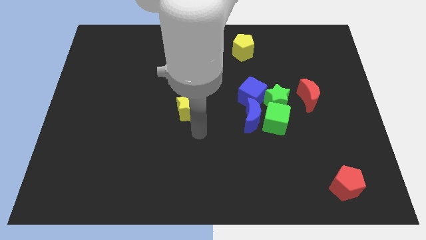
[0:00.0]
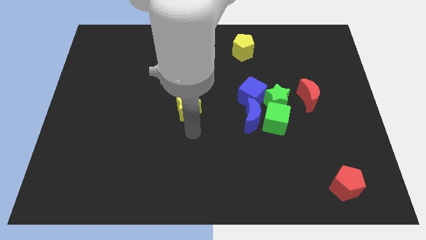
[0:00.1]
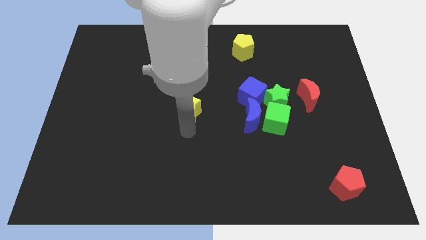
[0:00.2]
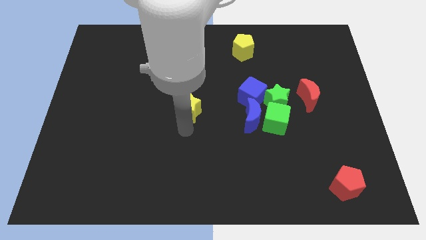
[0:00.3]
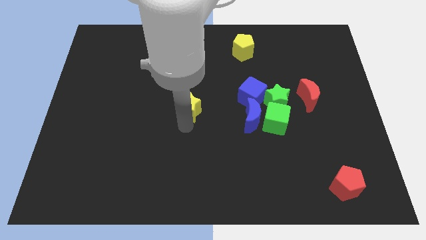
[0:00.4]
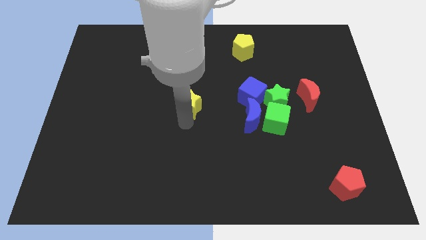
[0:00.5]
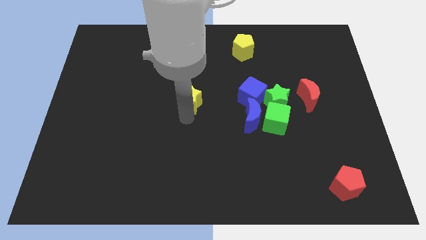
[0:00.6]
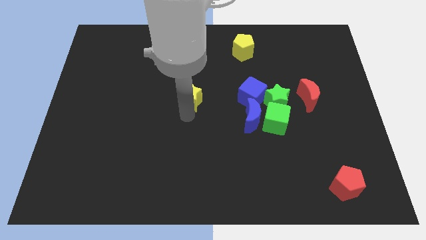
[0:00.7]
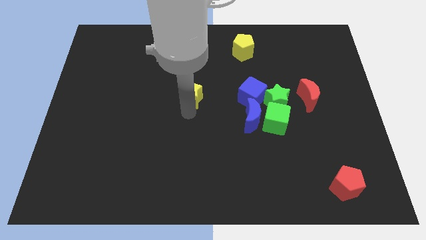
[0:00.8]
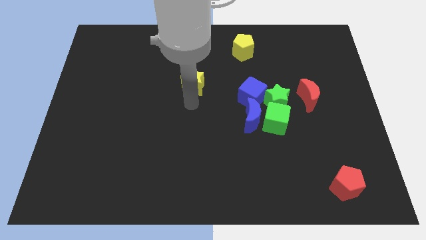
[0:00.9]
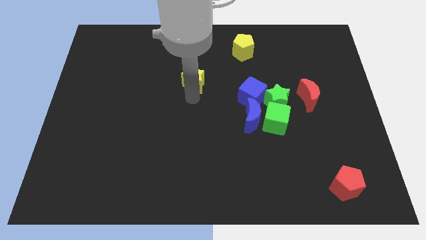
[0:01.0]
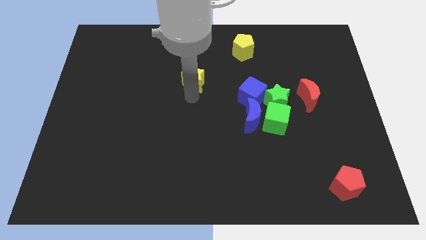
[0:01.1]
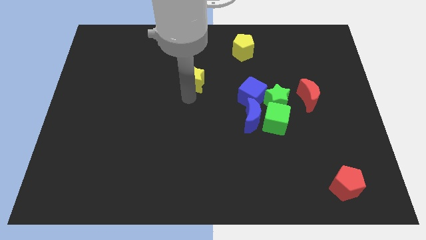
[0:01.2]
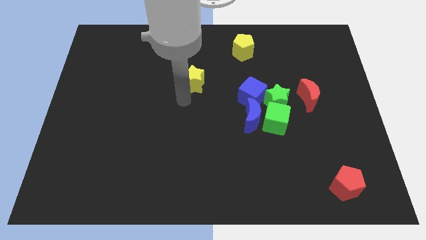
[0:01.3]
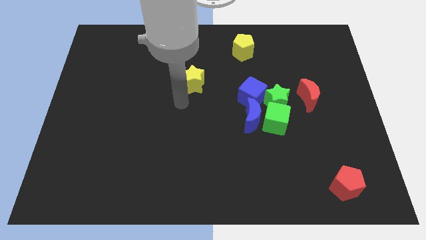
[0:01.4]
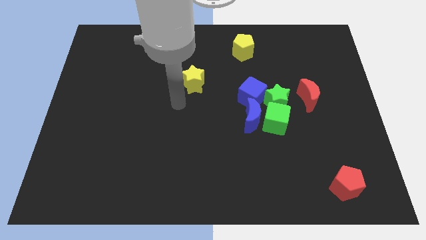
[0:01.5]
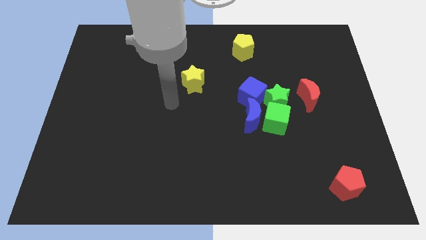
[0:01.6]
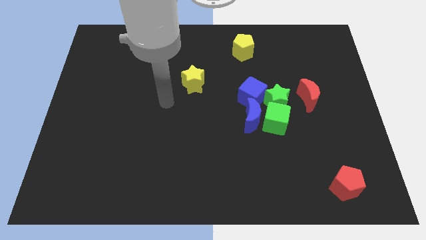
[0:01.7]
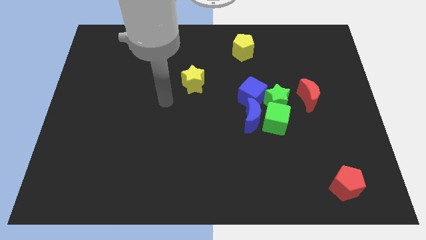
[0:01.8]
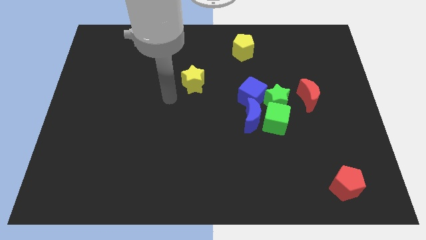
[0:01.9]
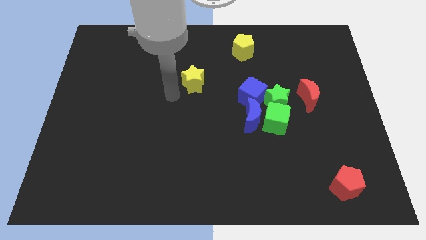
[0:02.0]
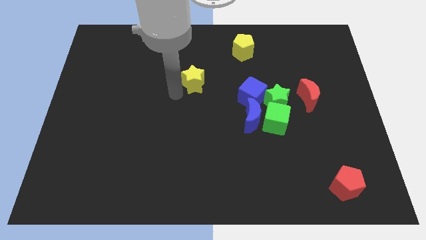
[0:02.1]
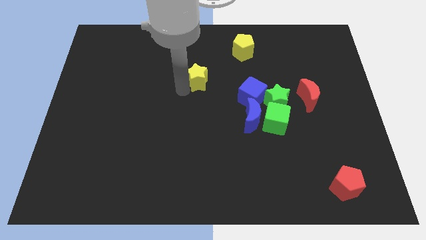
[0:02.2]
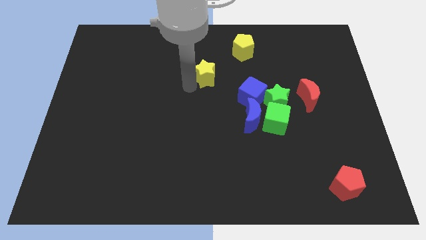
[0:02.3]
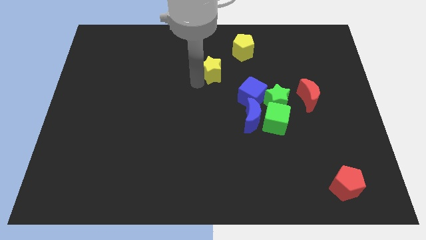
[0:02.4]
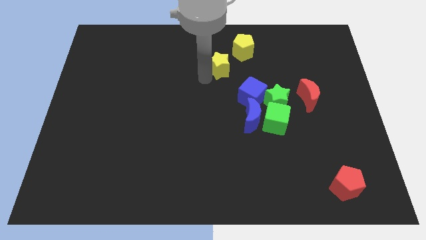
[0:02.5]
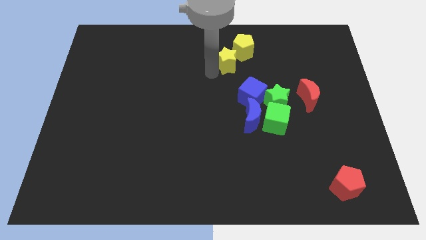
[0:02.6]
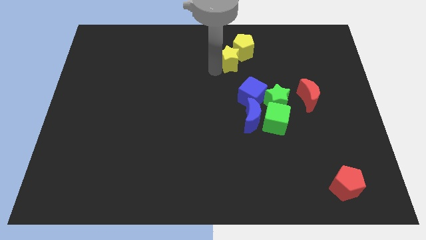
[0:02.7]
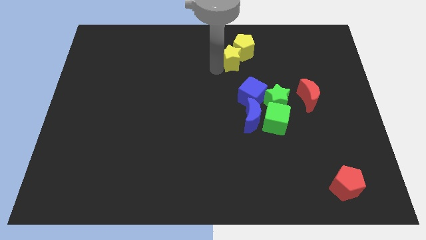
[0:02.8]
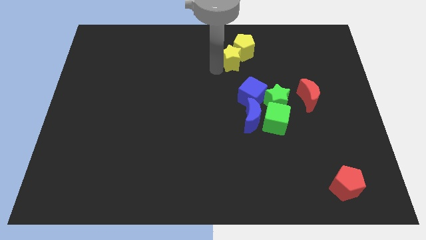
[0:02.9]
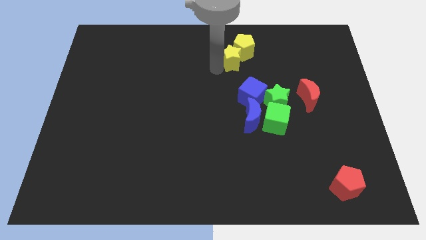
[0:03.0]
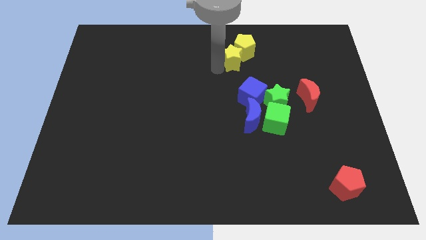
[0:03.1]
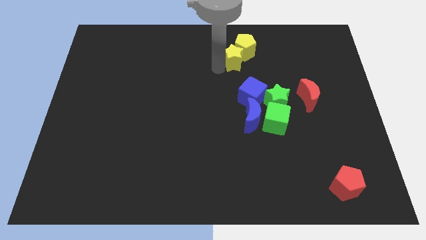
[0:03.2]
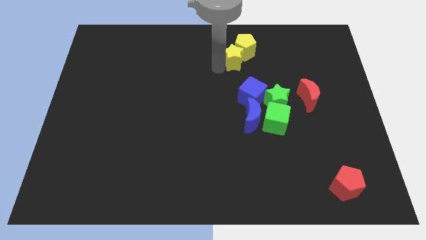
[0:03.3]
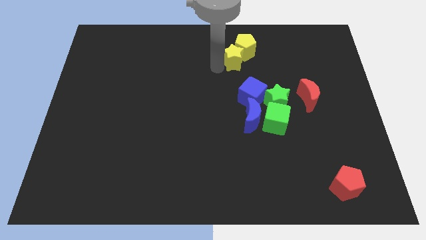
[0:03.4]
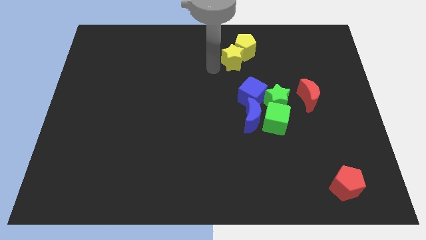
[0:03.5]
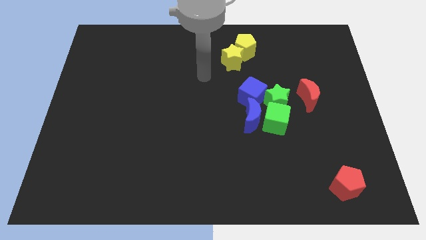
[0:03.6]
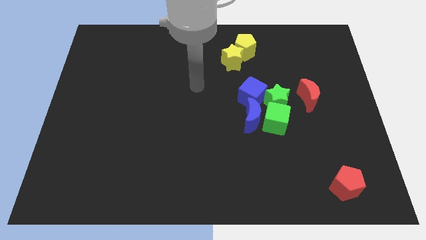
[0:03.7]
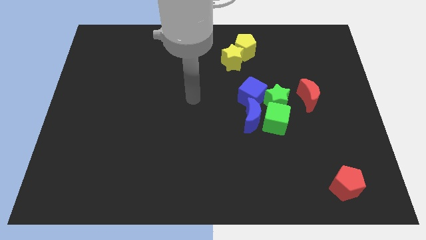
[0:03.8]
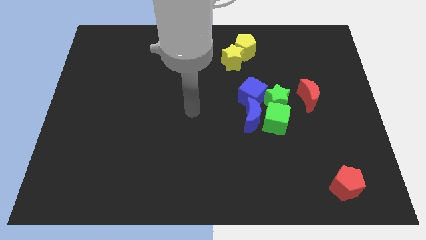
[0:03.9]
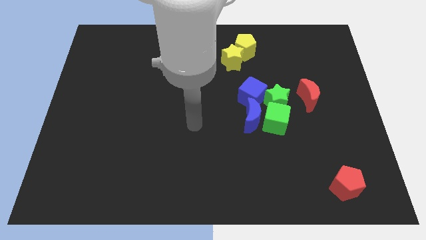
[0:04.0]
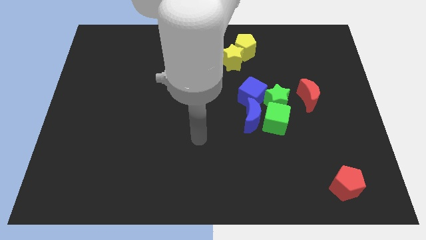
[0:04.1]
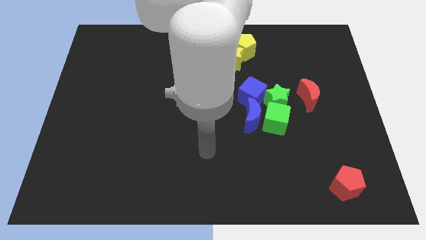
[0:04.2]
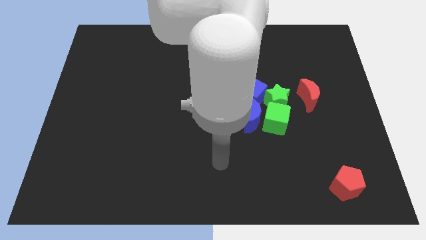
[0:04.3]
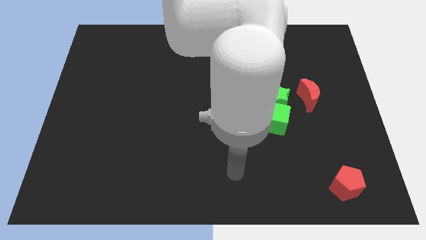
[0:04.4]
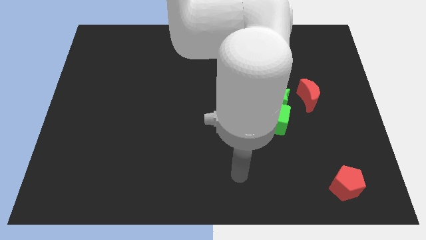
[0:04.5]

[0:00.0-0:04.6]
push yellow star below yellow pentagon

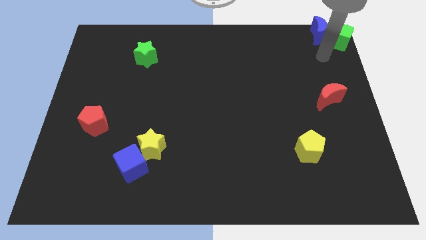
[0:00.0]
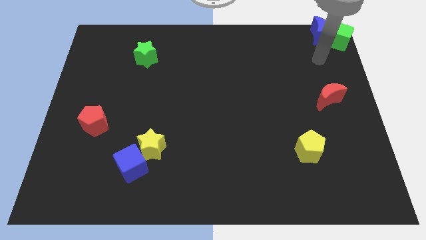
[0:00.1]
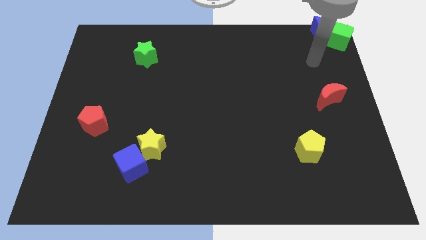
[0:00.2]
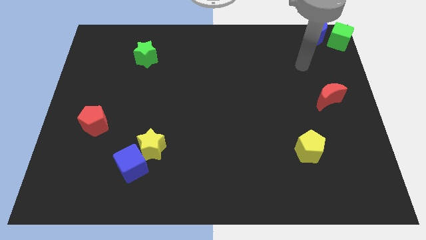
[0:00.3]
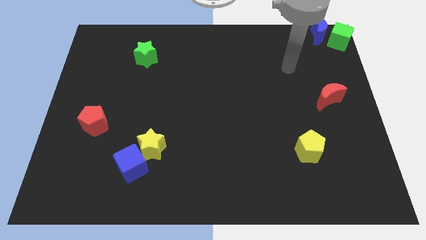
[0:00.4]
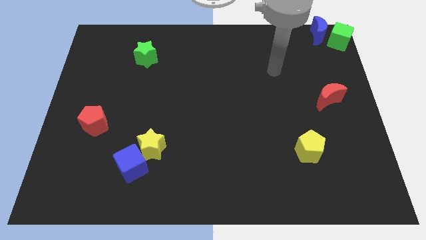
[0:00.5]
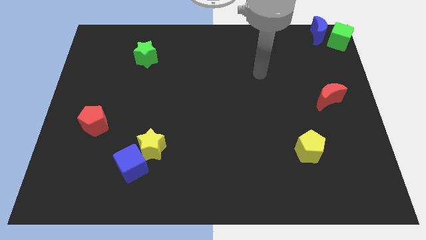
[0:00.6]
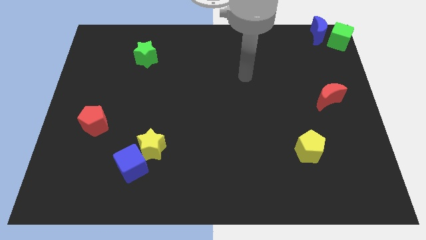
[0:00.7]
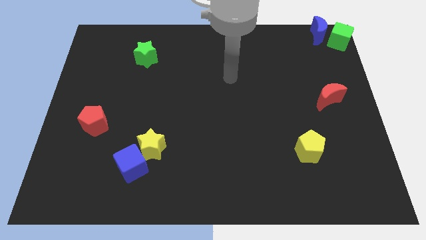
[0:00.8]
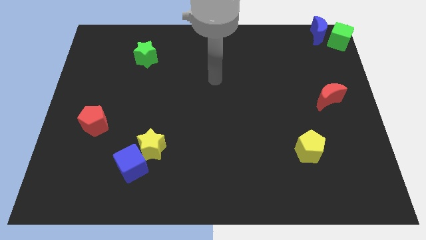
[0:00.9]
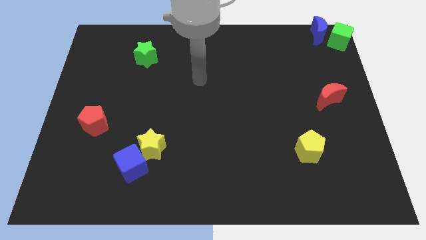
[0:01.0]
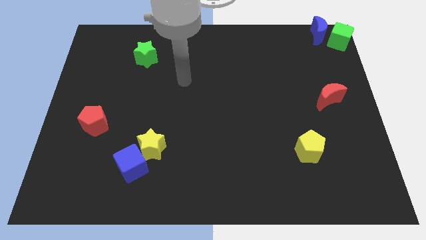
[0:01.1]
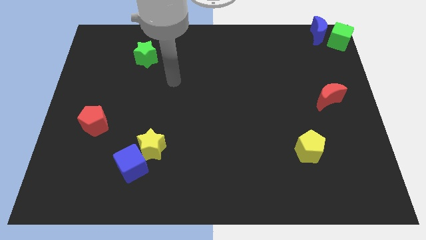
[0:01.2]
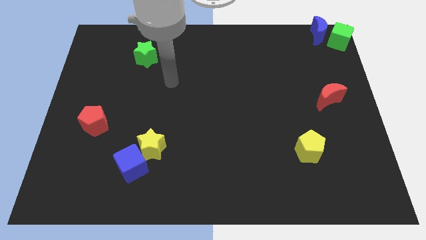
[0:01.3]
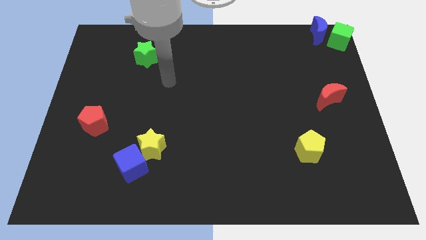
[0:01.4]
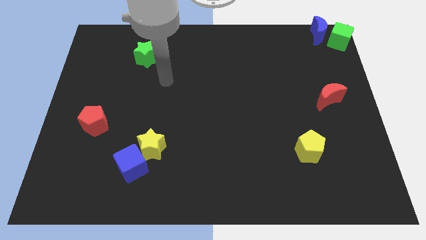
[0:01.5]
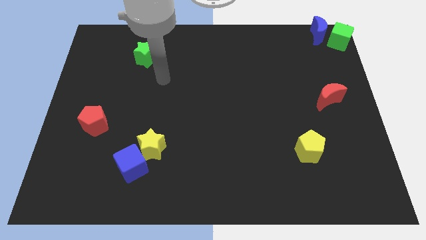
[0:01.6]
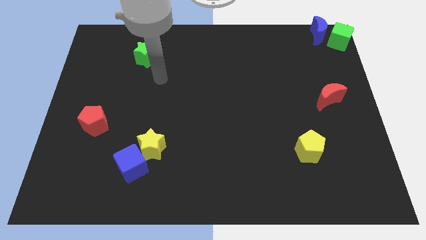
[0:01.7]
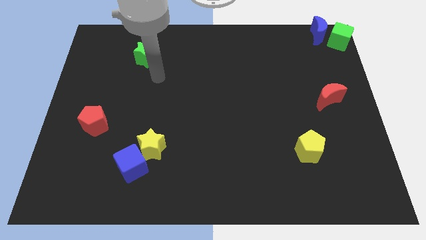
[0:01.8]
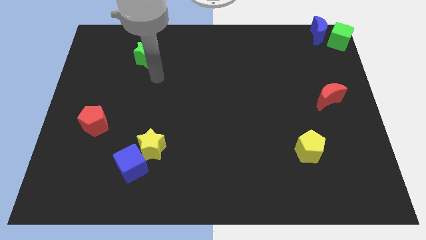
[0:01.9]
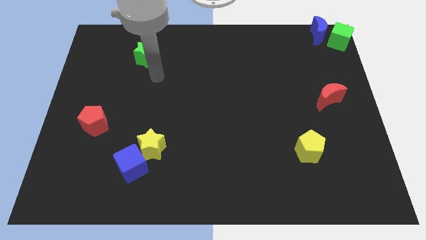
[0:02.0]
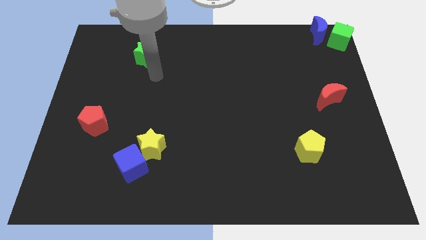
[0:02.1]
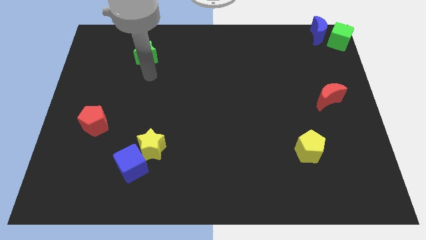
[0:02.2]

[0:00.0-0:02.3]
move your arm bottom to the green star

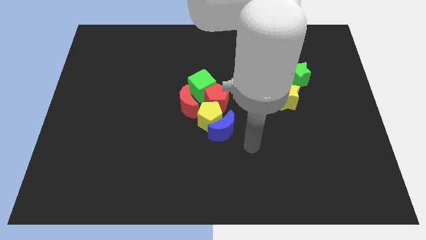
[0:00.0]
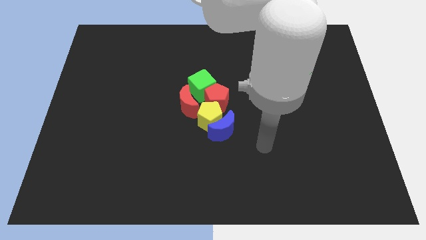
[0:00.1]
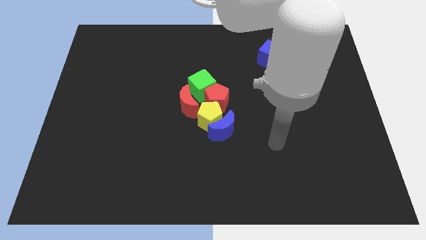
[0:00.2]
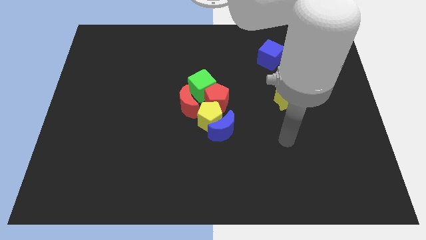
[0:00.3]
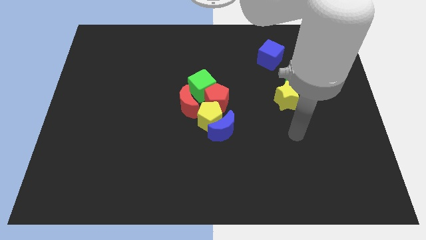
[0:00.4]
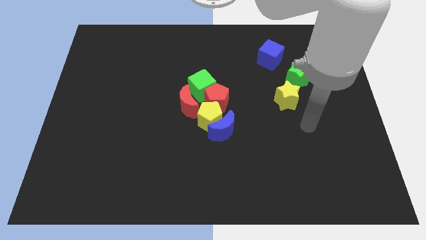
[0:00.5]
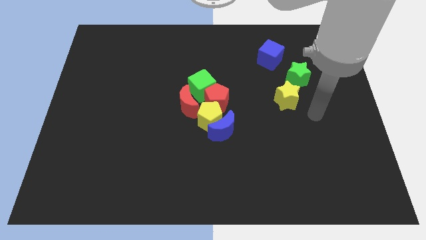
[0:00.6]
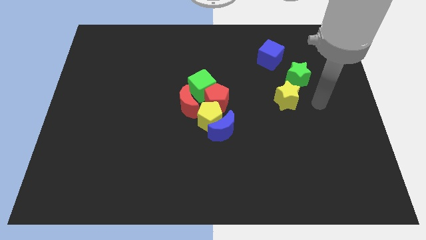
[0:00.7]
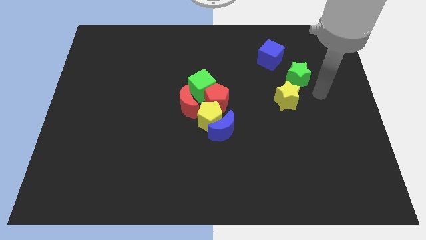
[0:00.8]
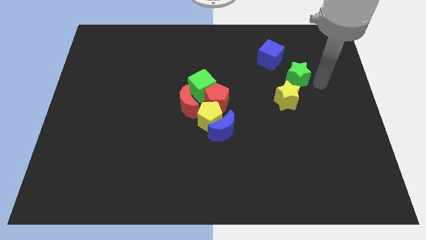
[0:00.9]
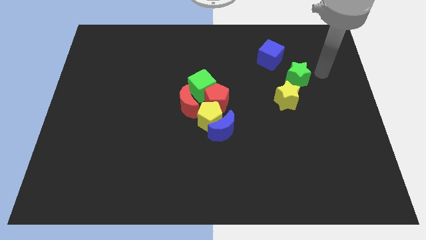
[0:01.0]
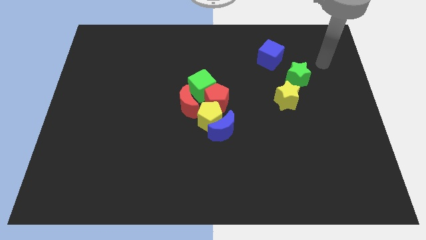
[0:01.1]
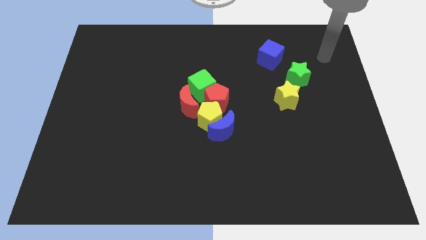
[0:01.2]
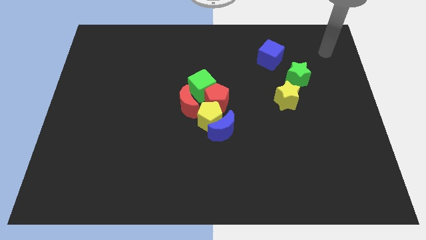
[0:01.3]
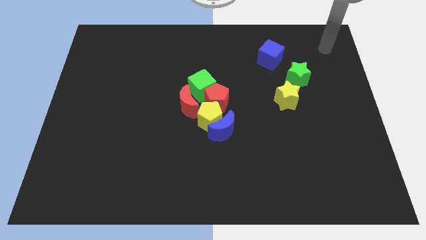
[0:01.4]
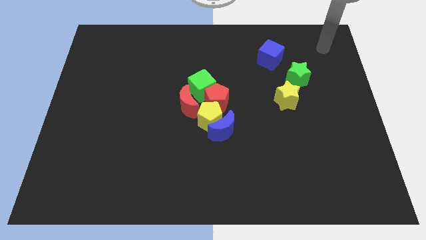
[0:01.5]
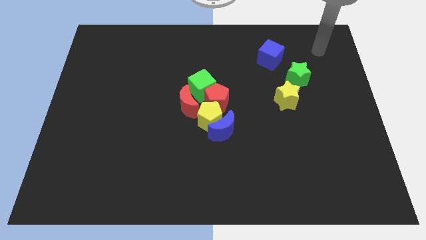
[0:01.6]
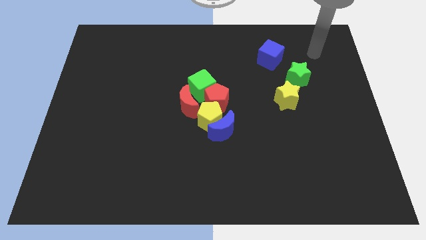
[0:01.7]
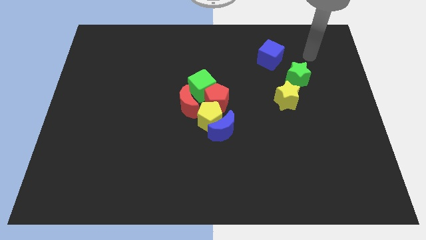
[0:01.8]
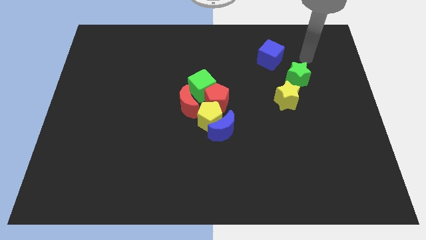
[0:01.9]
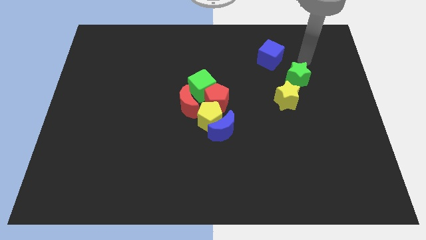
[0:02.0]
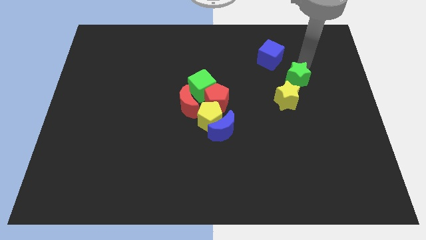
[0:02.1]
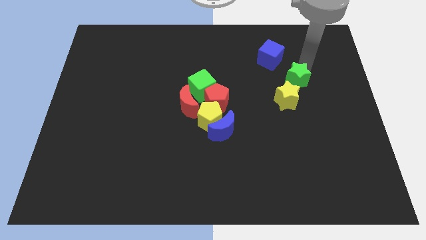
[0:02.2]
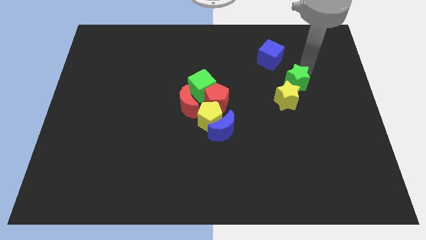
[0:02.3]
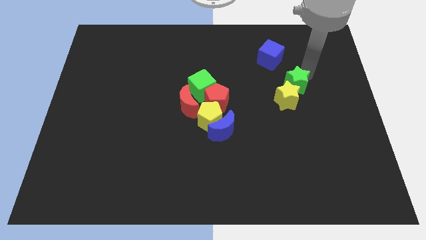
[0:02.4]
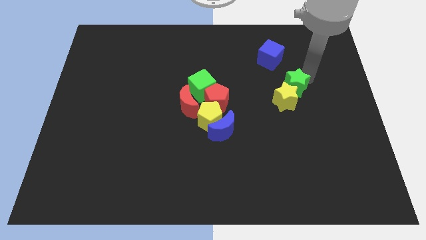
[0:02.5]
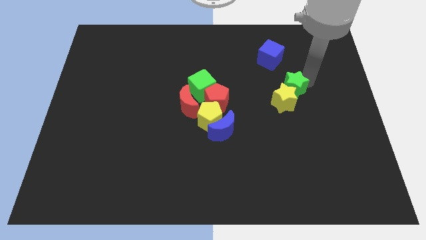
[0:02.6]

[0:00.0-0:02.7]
push the green star into yellow star
